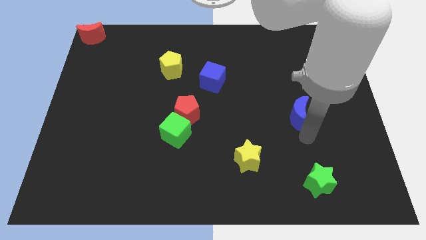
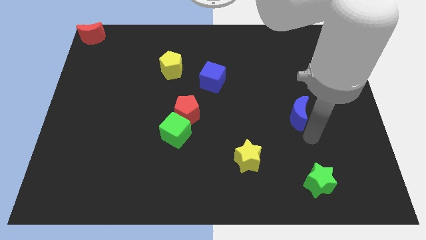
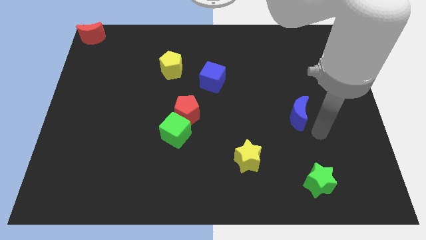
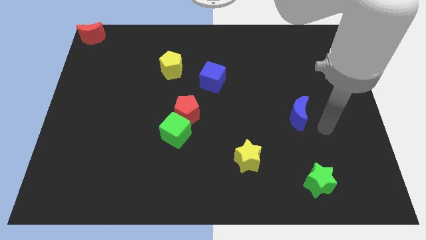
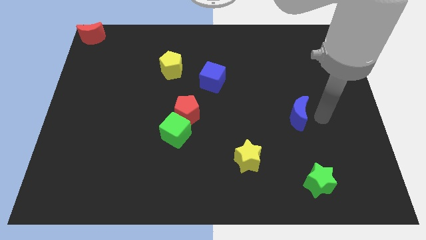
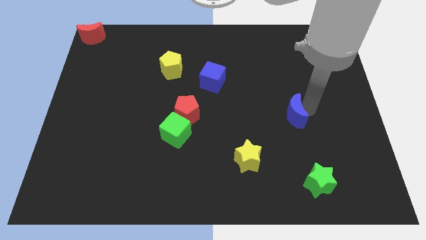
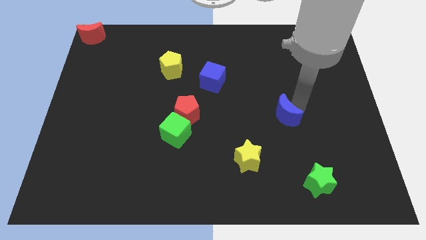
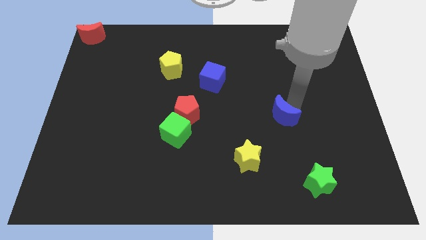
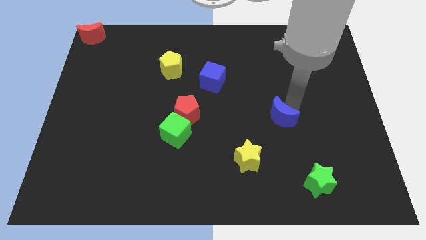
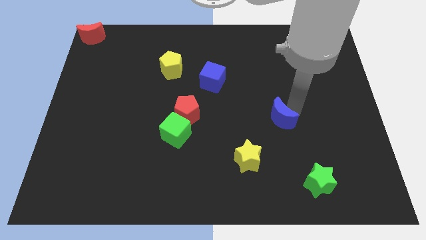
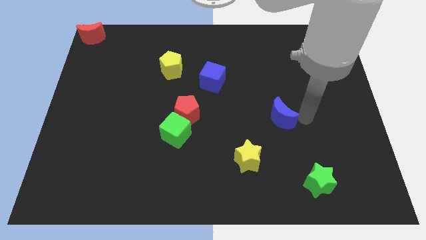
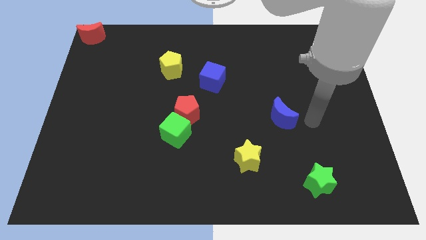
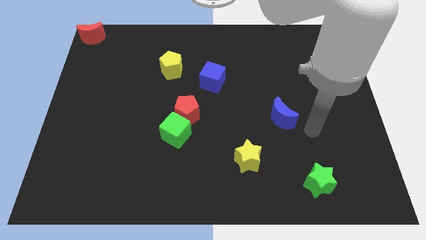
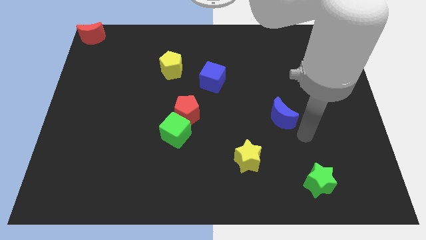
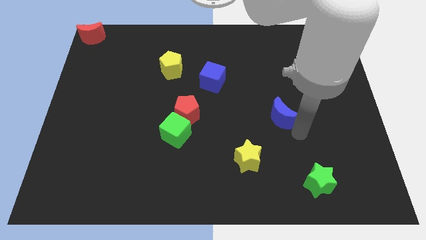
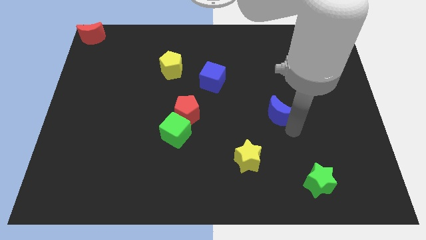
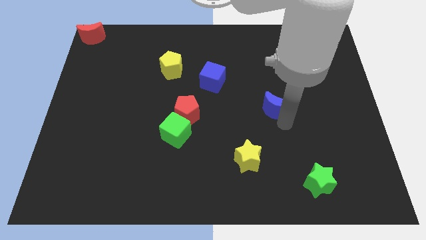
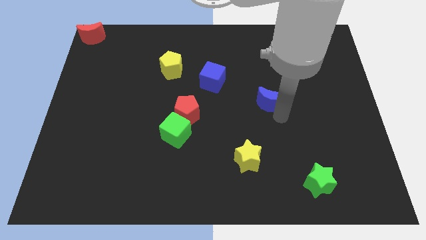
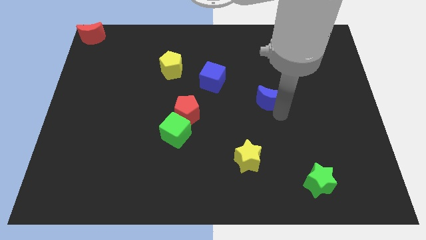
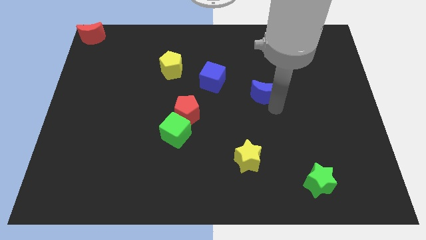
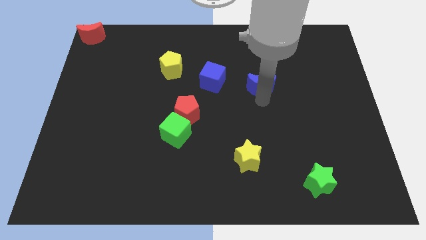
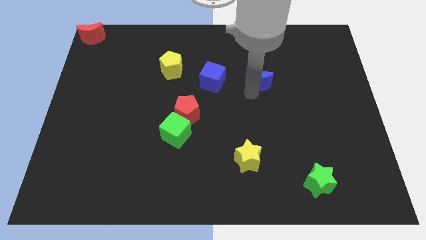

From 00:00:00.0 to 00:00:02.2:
move the blue moon diagonal to the right of the blue cube

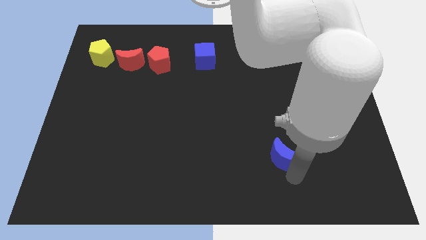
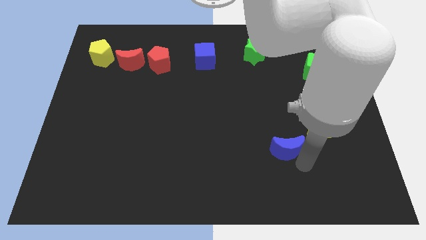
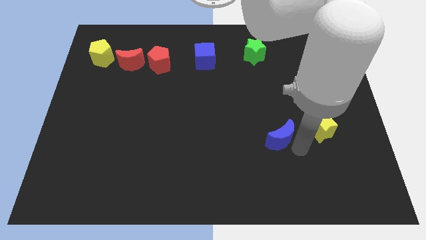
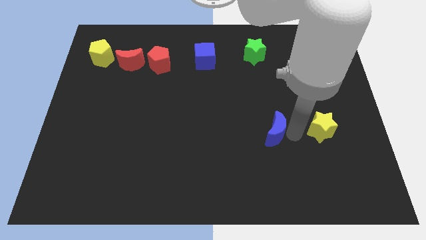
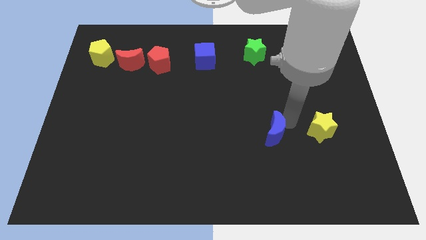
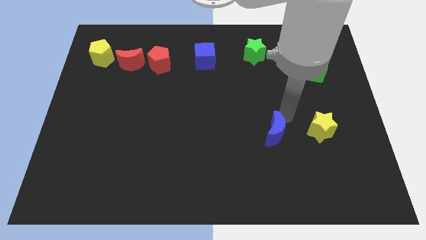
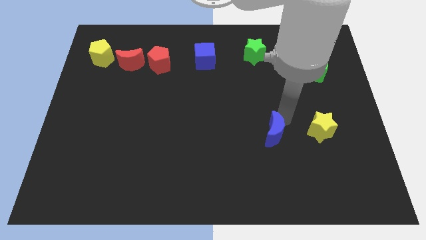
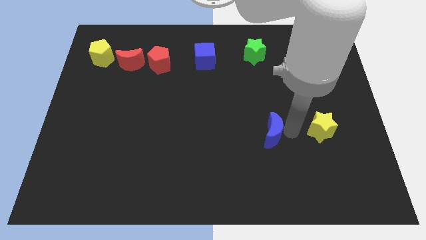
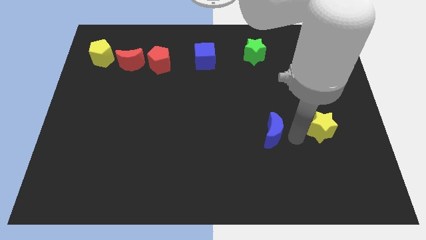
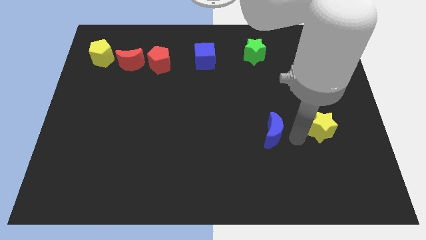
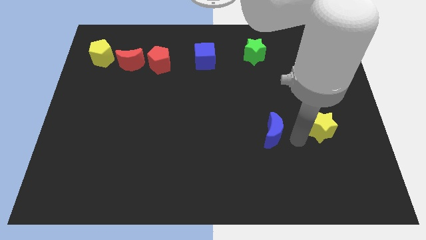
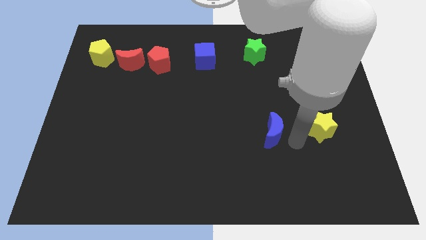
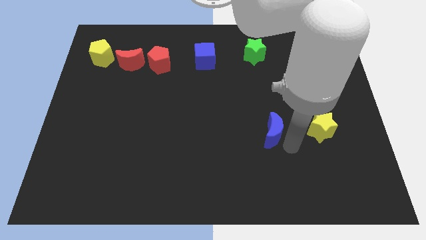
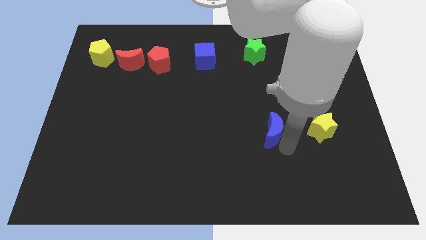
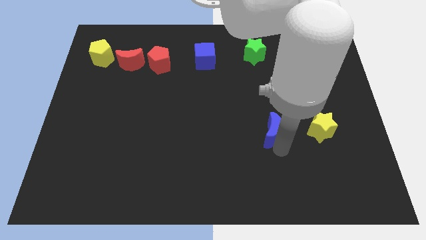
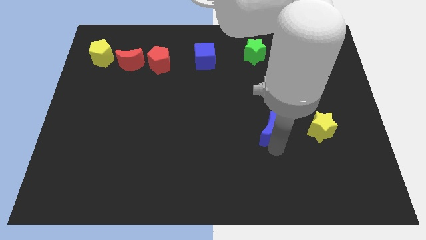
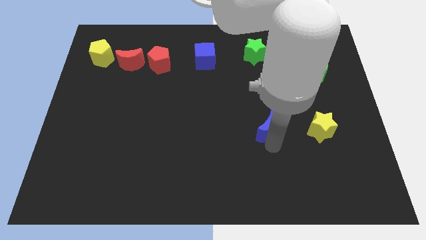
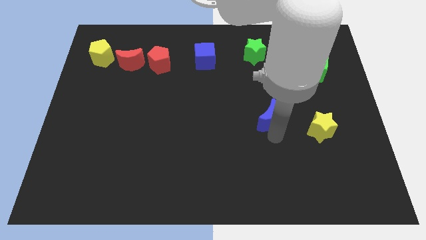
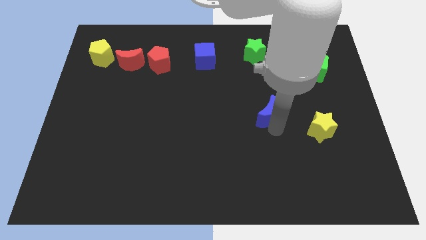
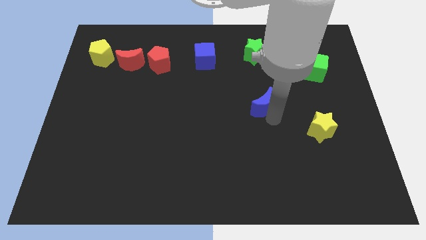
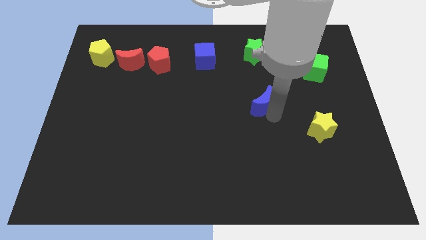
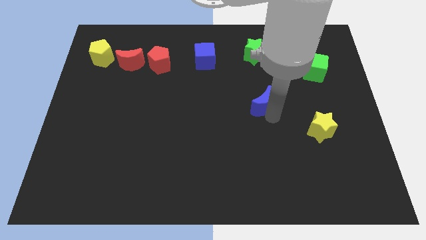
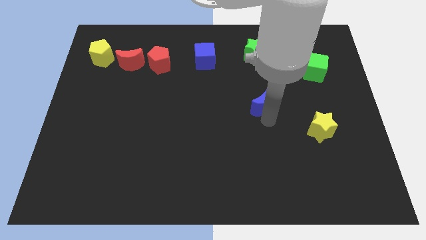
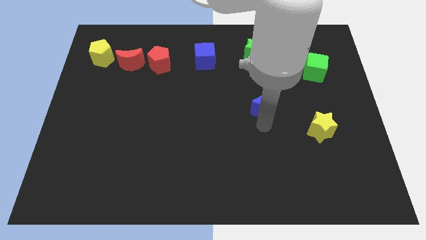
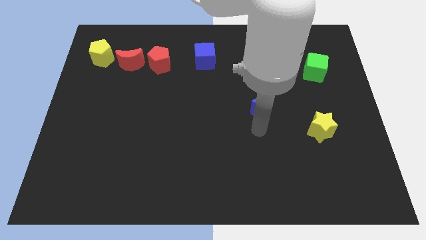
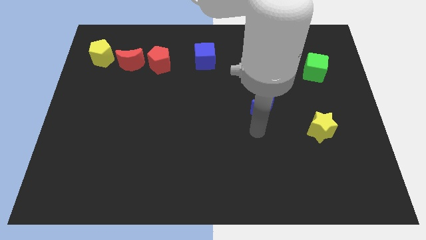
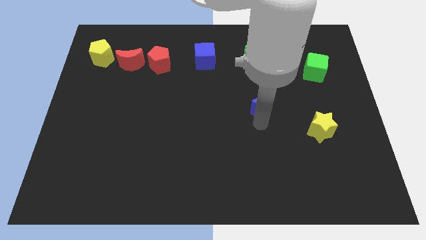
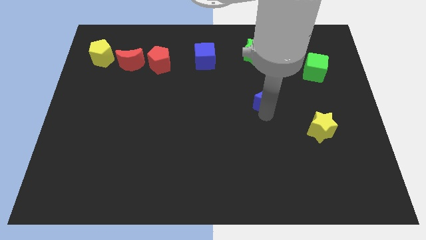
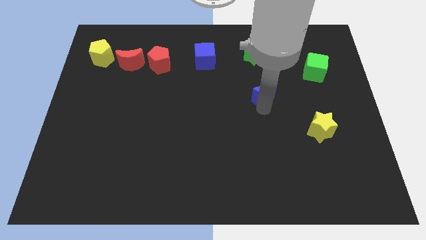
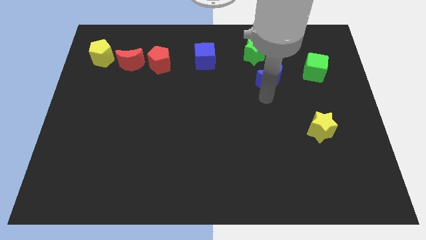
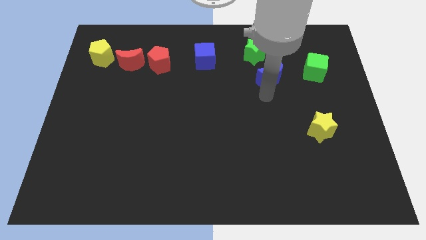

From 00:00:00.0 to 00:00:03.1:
slide blue moon towards green star

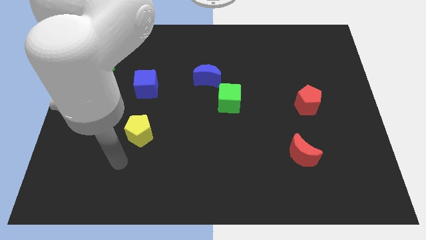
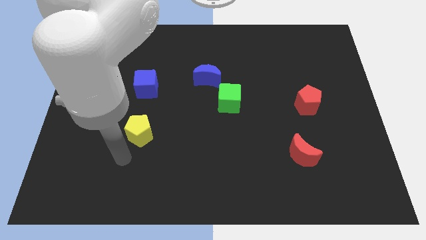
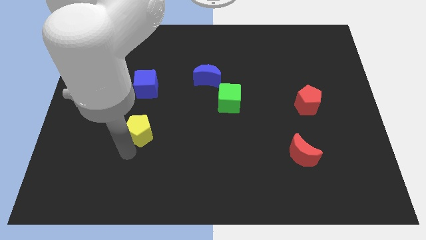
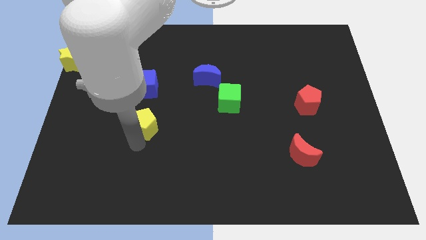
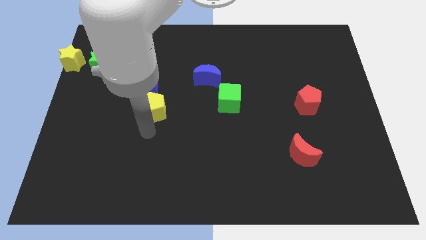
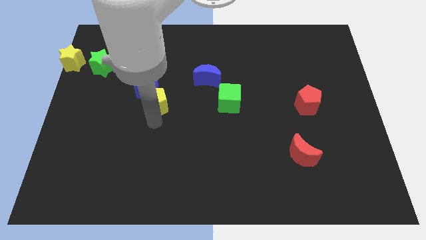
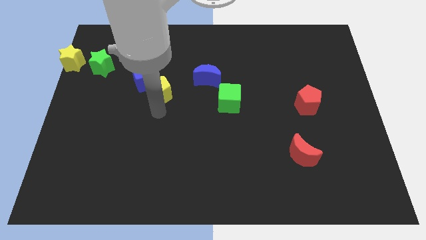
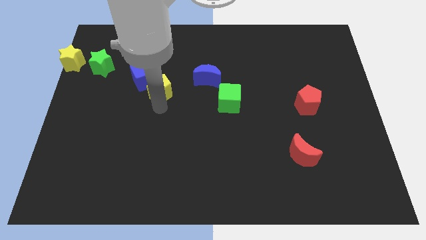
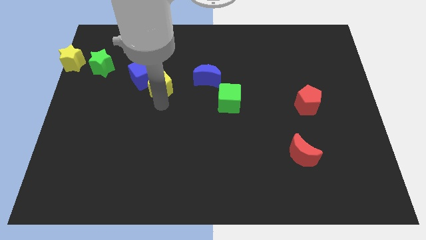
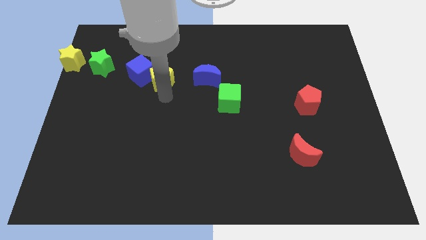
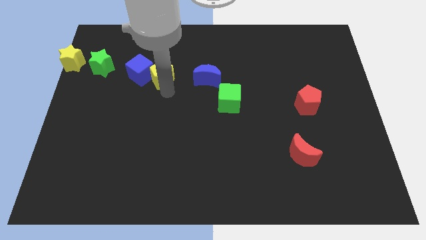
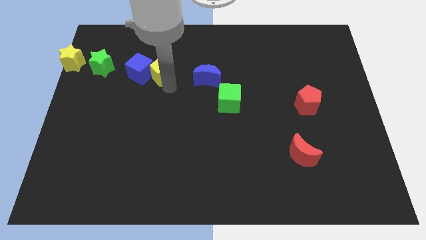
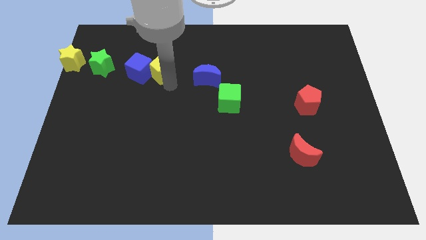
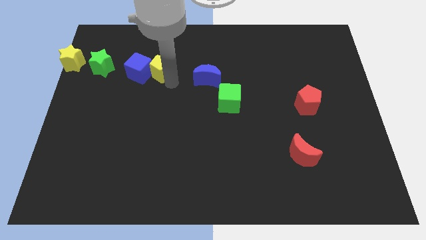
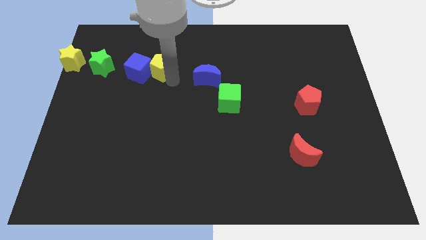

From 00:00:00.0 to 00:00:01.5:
push the yellow pentagon to the right of the blue cube

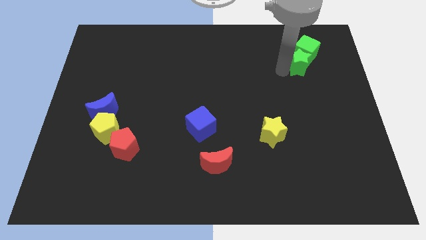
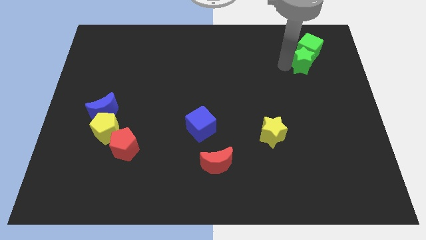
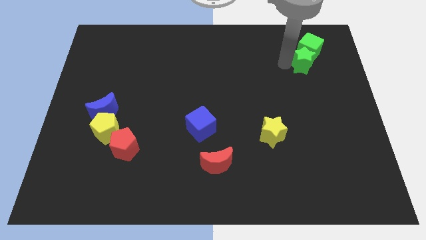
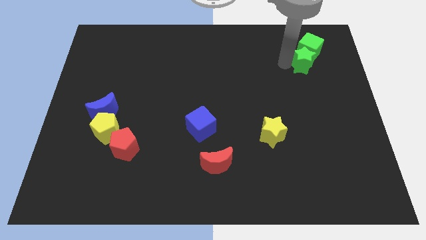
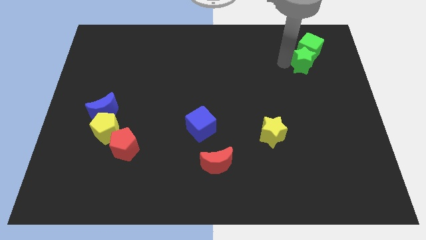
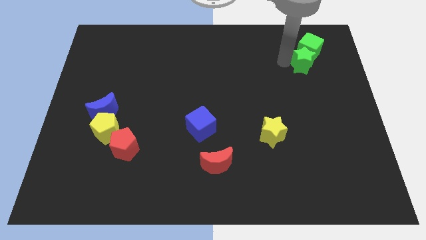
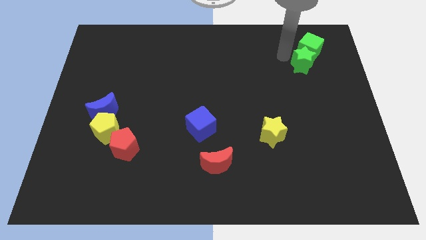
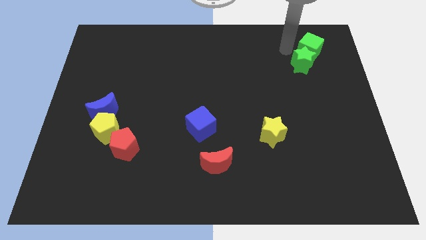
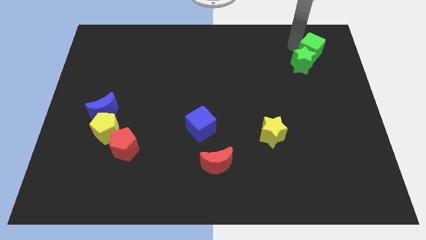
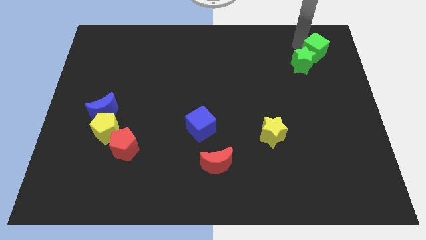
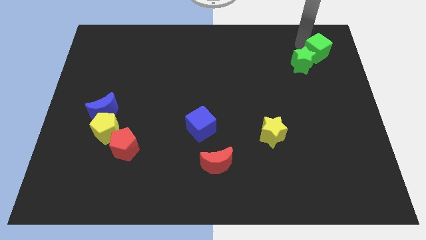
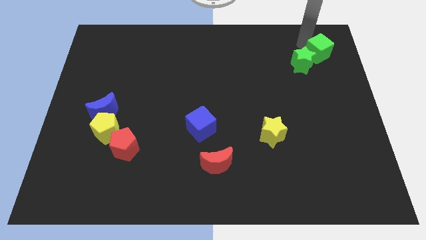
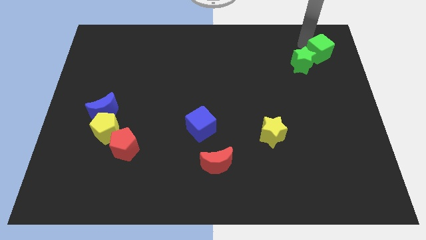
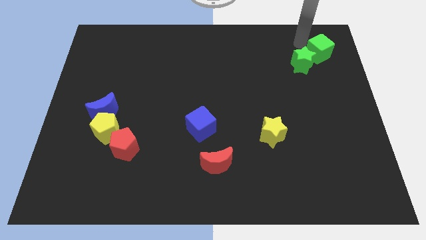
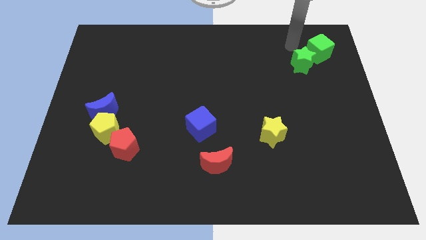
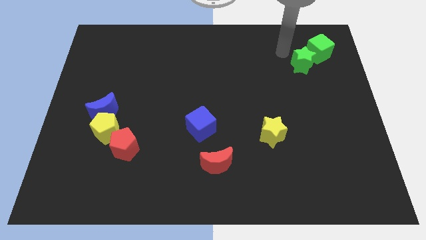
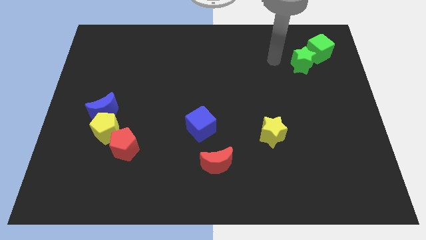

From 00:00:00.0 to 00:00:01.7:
slightly push the green cube towards right of the board

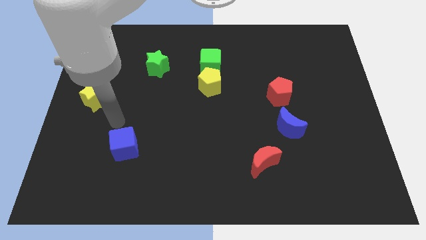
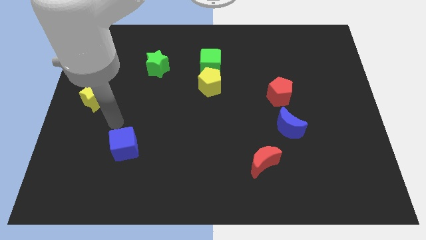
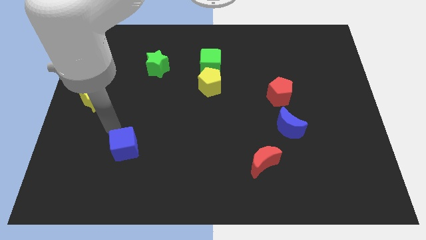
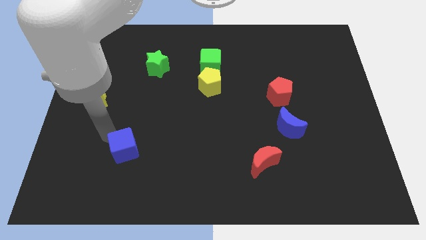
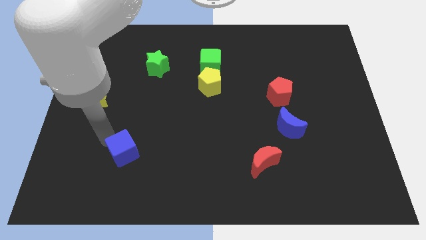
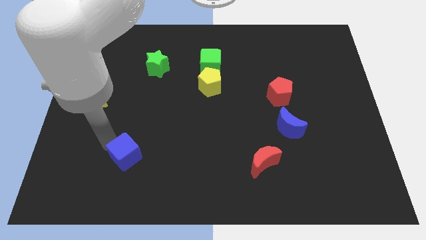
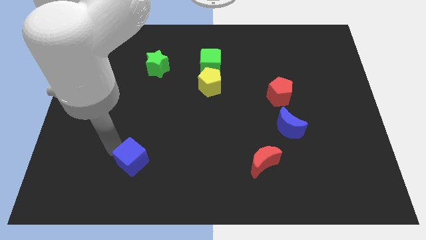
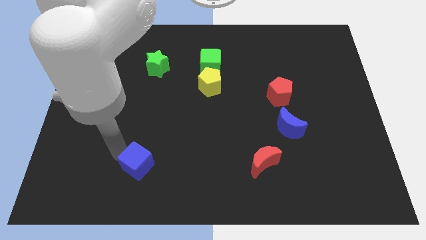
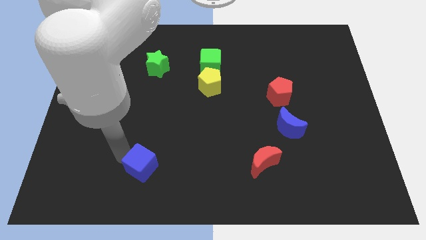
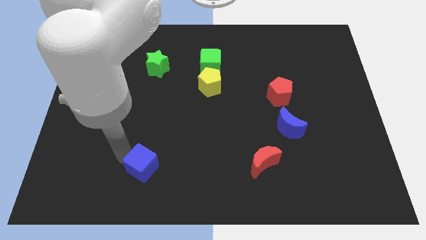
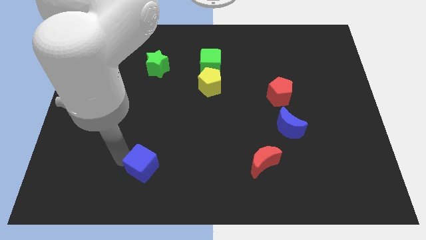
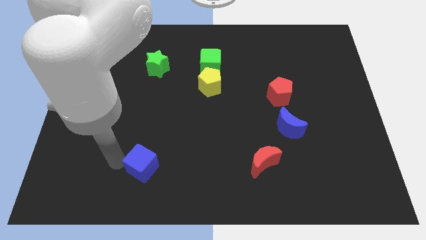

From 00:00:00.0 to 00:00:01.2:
place the blue cube left to the red moon
